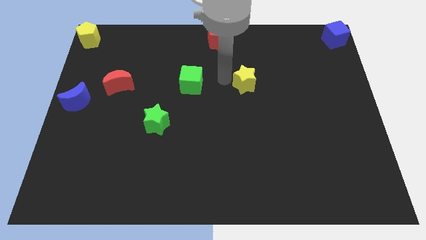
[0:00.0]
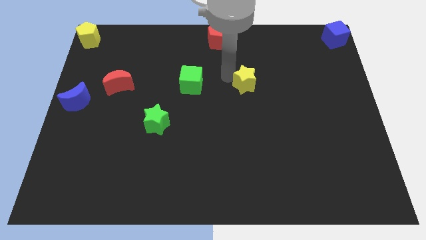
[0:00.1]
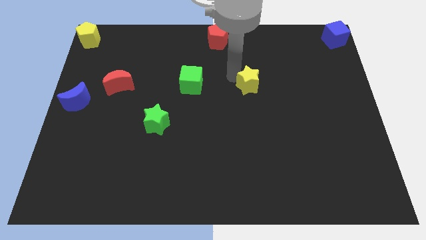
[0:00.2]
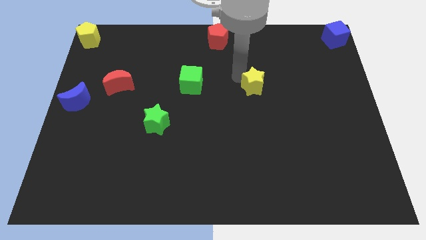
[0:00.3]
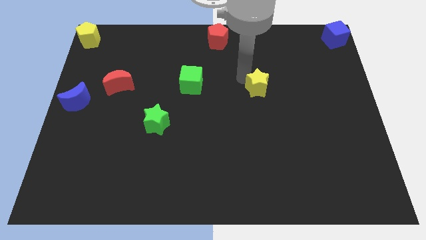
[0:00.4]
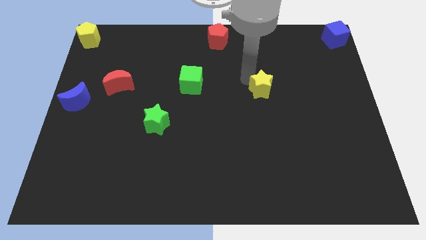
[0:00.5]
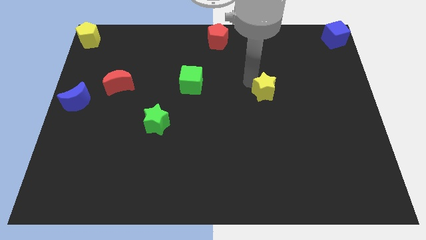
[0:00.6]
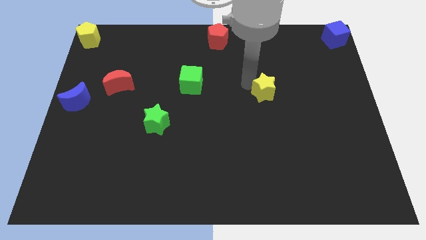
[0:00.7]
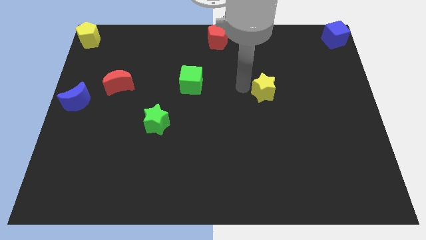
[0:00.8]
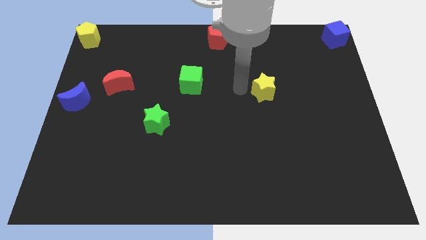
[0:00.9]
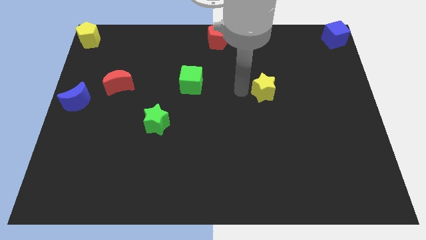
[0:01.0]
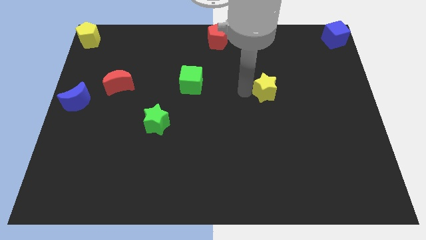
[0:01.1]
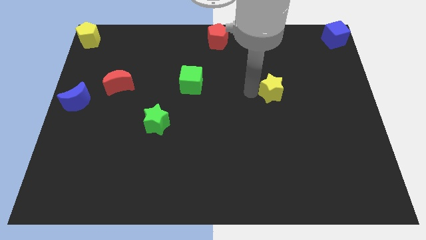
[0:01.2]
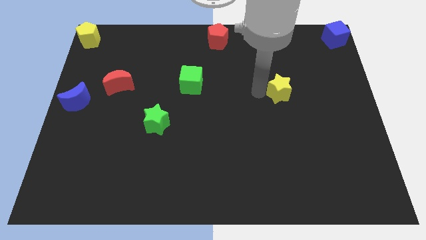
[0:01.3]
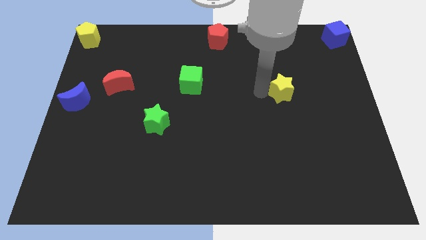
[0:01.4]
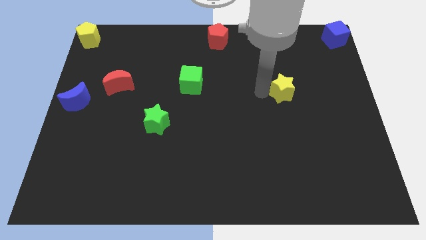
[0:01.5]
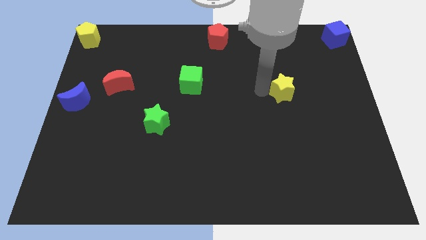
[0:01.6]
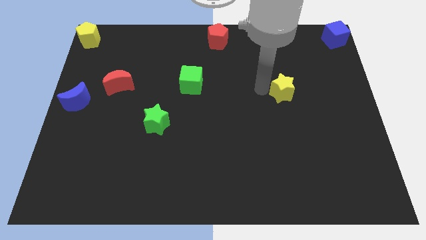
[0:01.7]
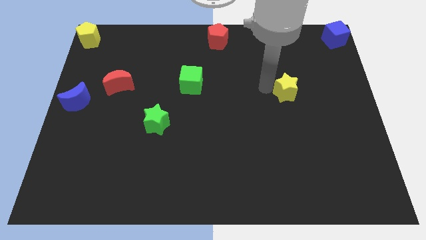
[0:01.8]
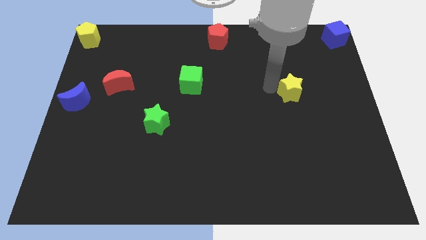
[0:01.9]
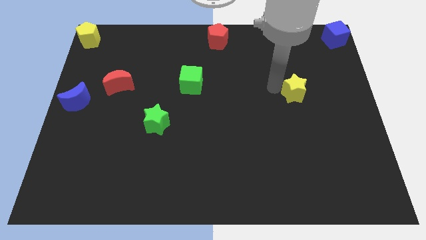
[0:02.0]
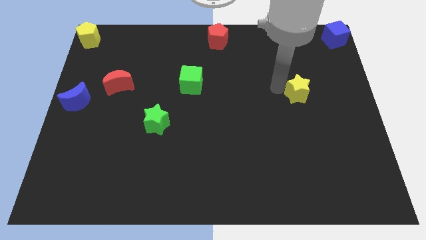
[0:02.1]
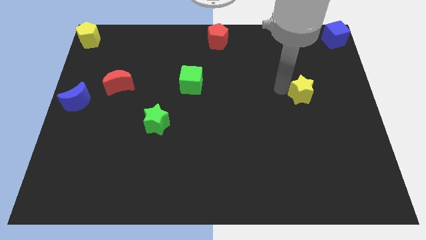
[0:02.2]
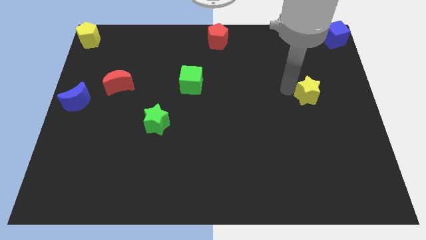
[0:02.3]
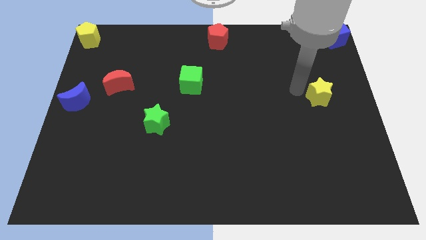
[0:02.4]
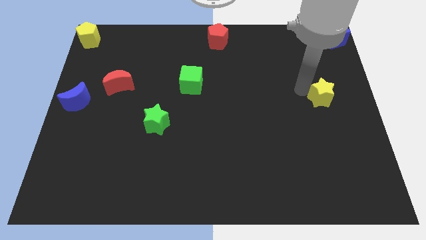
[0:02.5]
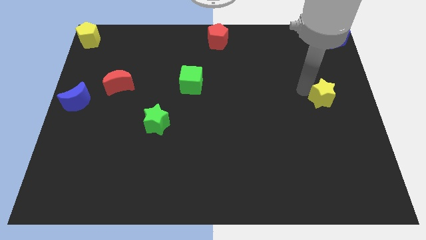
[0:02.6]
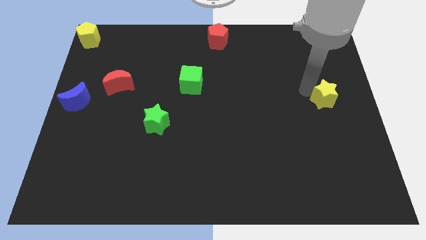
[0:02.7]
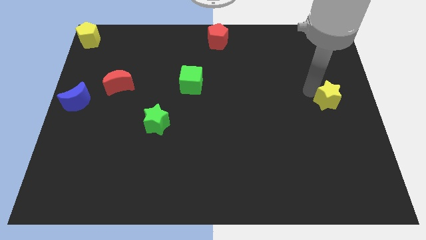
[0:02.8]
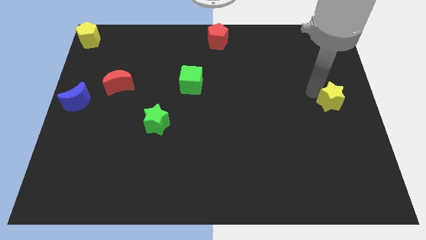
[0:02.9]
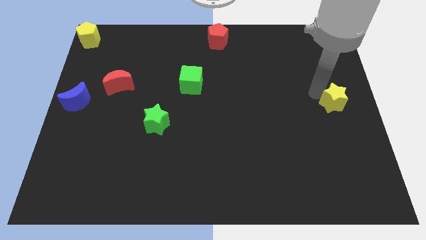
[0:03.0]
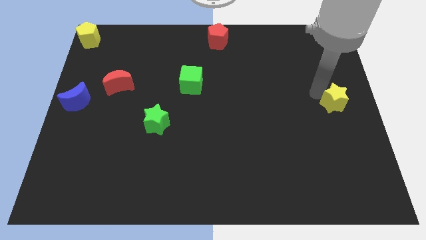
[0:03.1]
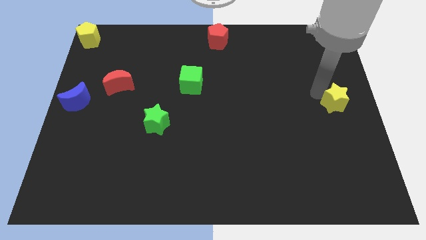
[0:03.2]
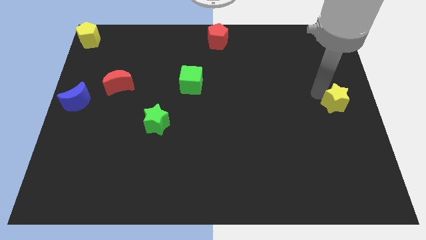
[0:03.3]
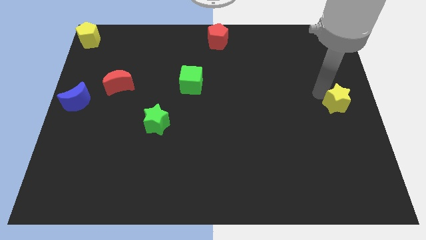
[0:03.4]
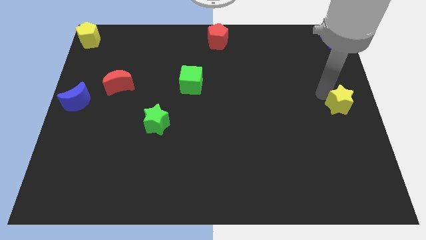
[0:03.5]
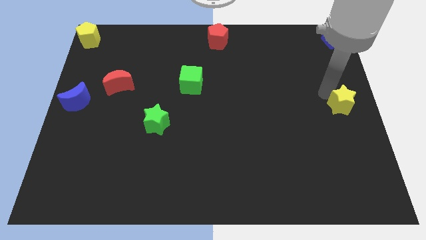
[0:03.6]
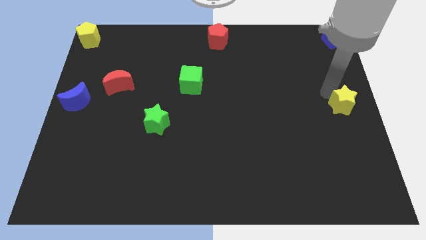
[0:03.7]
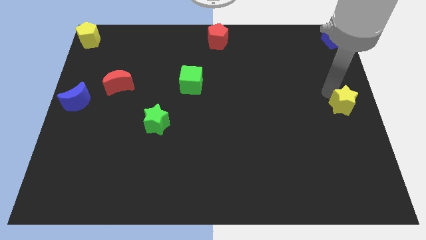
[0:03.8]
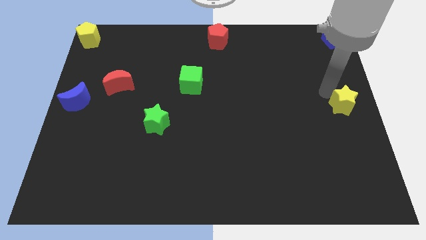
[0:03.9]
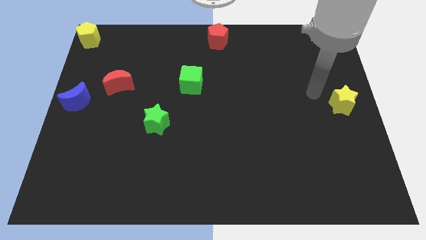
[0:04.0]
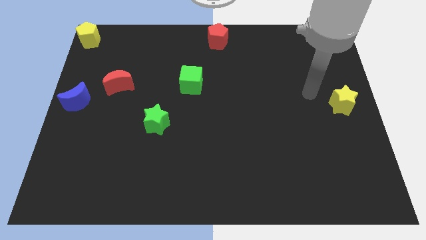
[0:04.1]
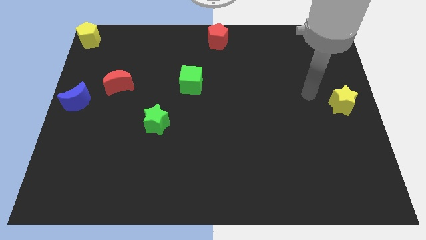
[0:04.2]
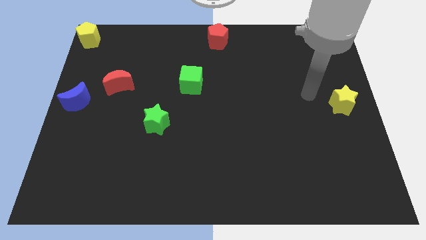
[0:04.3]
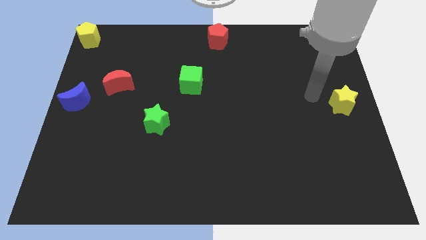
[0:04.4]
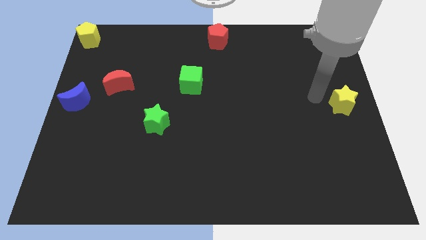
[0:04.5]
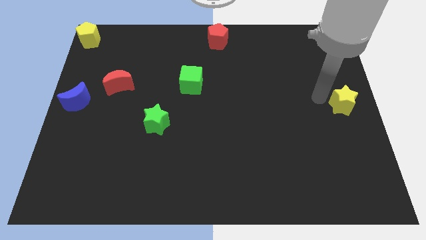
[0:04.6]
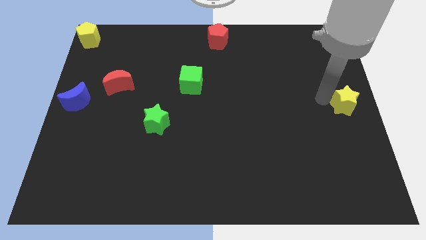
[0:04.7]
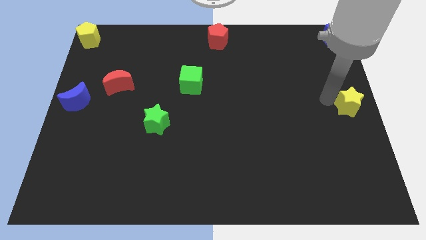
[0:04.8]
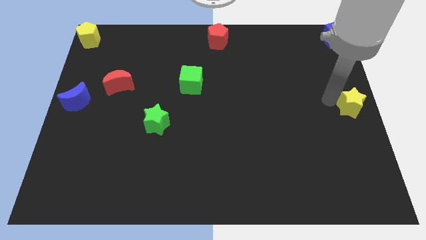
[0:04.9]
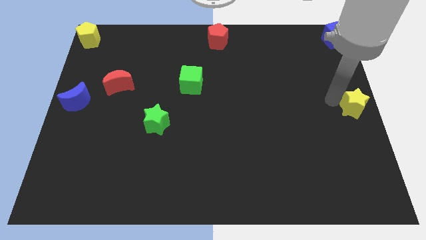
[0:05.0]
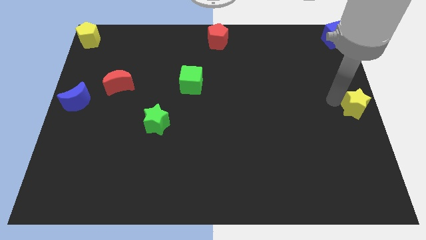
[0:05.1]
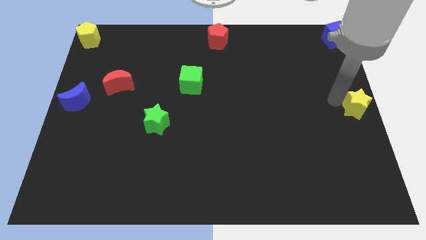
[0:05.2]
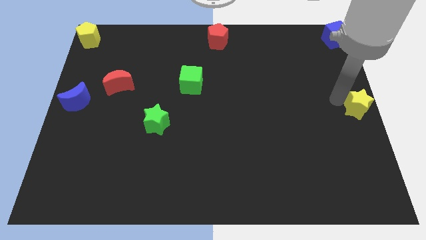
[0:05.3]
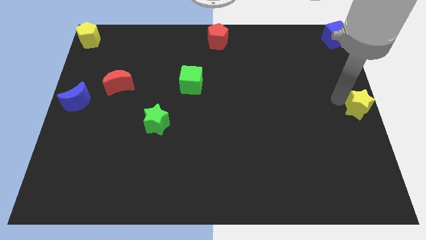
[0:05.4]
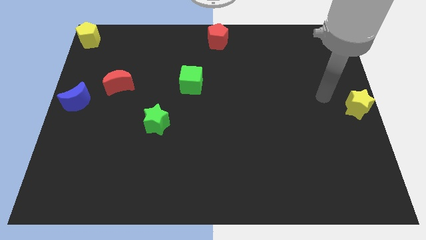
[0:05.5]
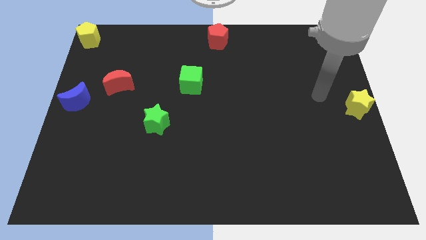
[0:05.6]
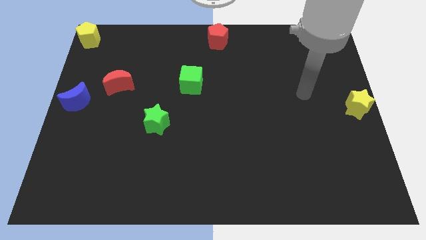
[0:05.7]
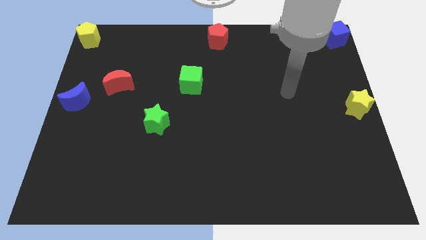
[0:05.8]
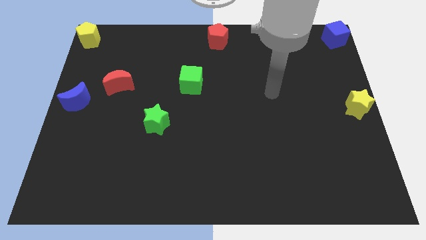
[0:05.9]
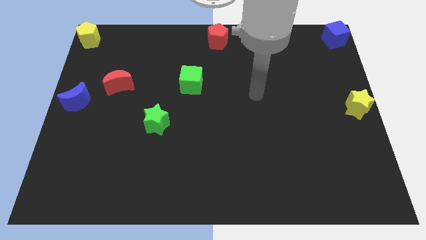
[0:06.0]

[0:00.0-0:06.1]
place yellow star in the center right

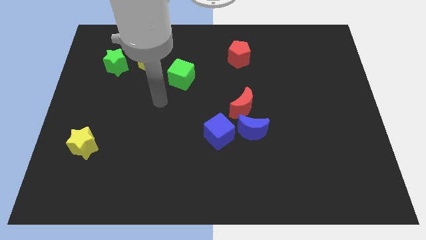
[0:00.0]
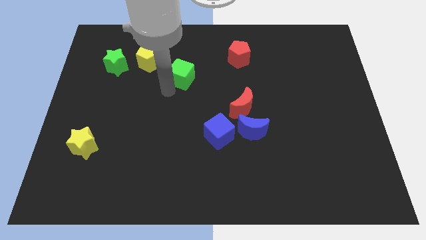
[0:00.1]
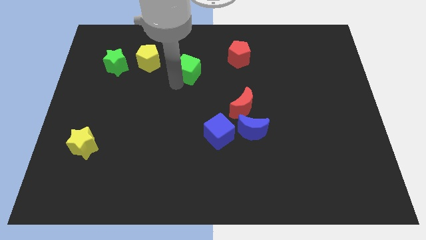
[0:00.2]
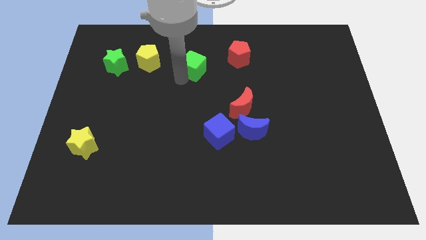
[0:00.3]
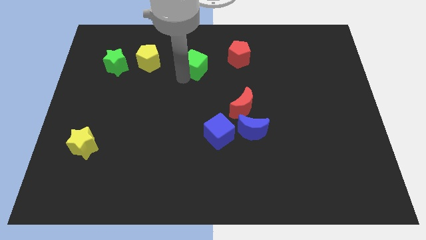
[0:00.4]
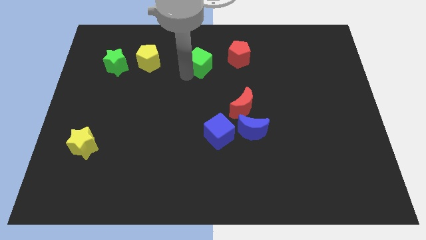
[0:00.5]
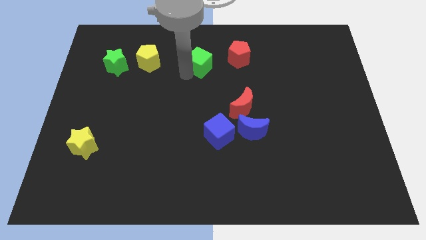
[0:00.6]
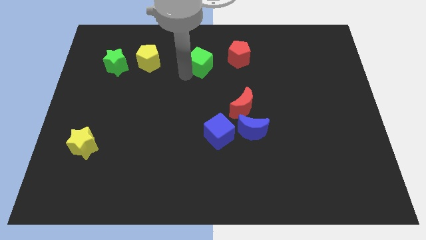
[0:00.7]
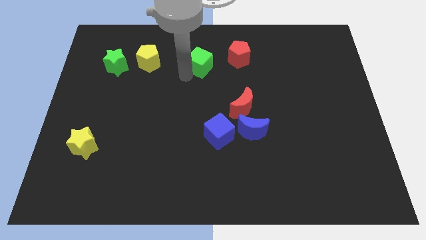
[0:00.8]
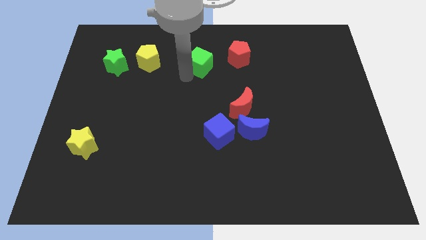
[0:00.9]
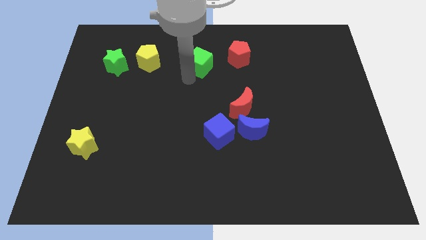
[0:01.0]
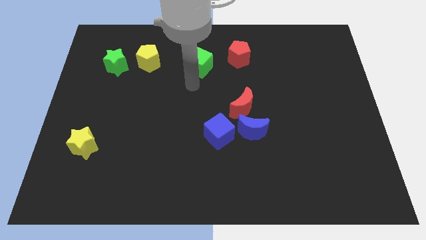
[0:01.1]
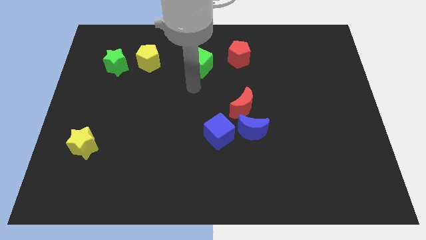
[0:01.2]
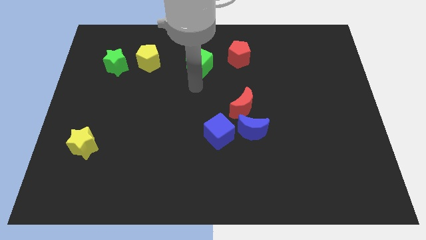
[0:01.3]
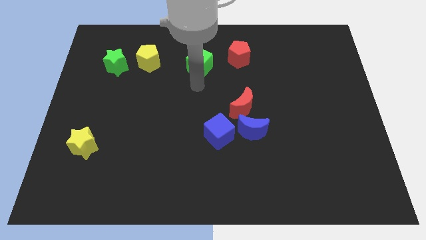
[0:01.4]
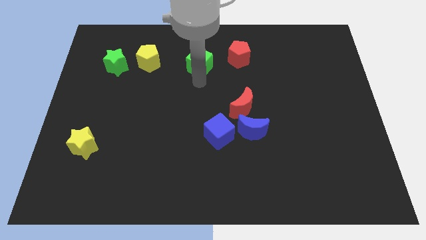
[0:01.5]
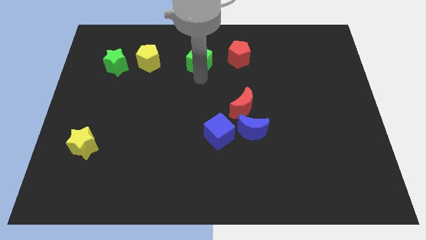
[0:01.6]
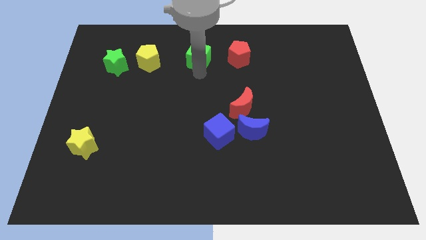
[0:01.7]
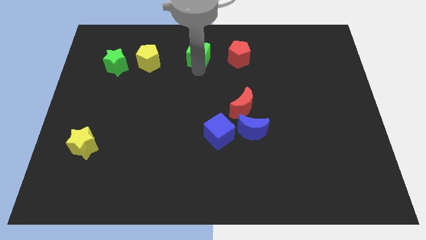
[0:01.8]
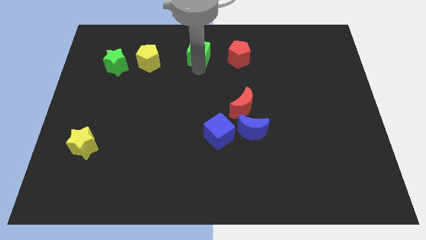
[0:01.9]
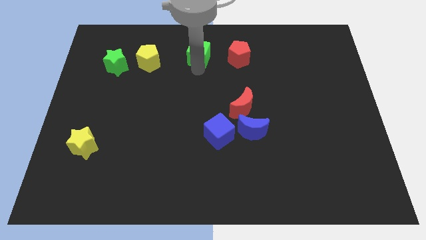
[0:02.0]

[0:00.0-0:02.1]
place the green cube beside the yellow pentagon

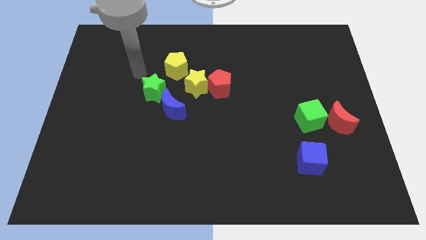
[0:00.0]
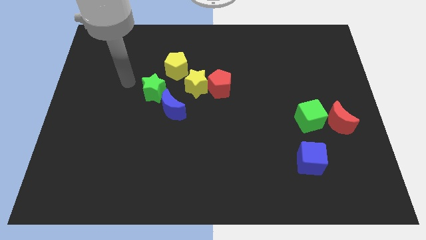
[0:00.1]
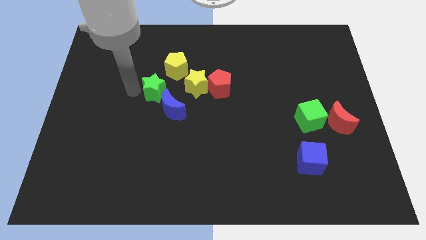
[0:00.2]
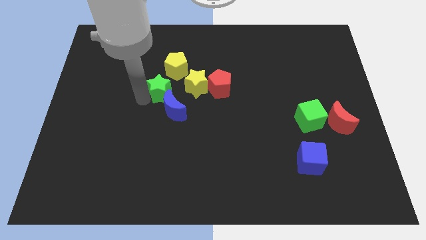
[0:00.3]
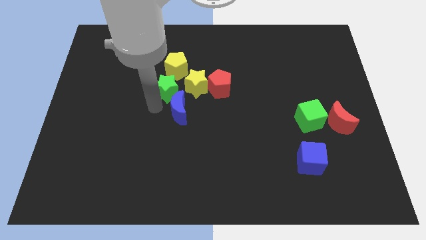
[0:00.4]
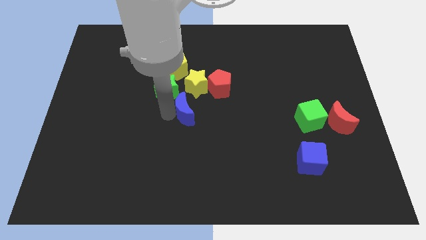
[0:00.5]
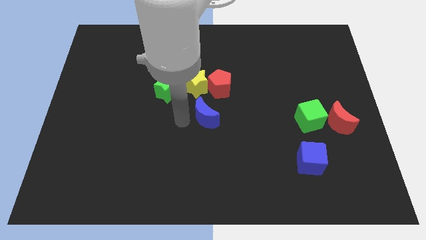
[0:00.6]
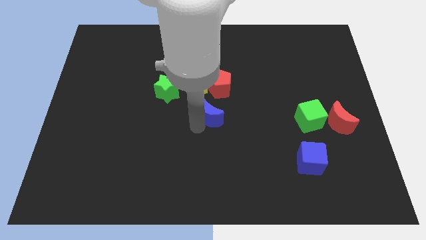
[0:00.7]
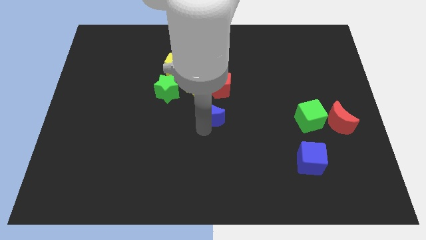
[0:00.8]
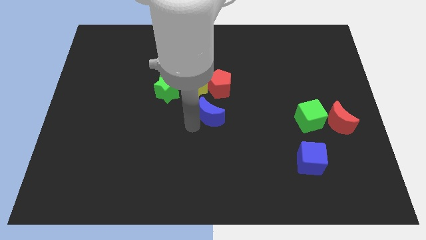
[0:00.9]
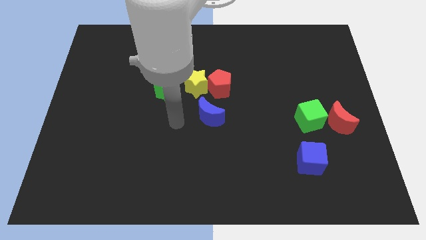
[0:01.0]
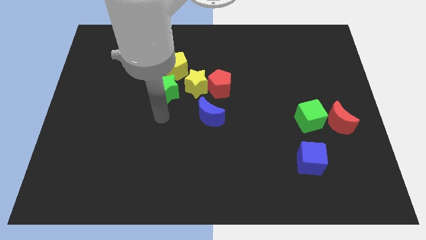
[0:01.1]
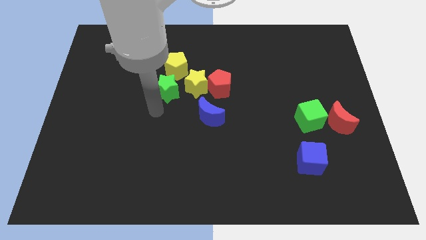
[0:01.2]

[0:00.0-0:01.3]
place the blue moon below the red pentagon
